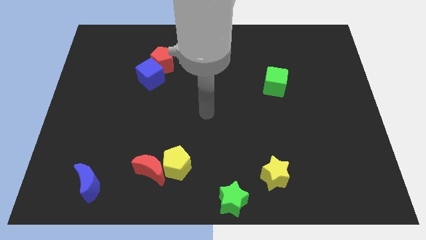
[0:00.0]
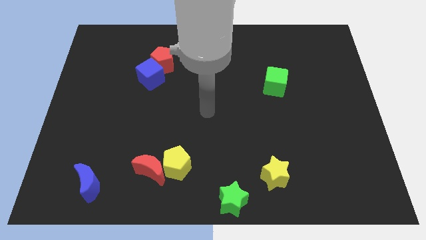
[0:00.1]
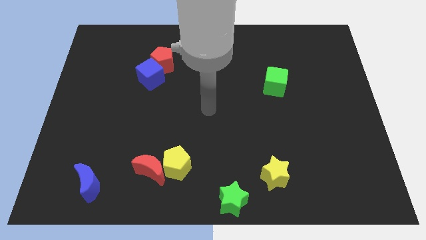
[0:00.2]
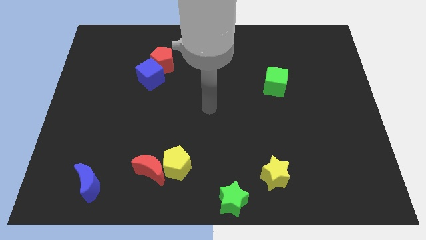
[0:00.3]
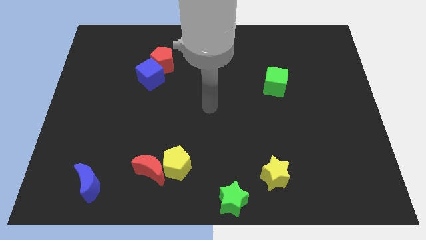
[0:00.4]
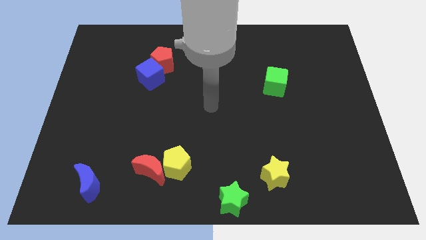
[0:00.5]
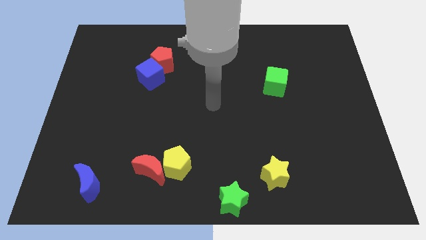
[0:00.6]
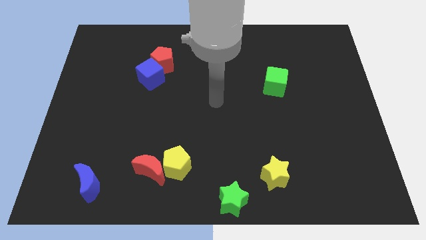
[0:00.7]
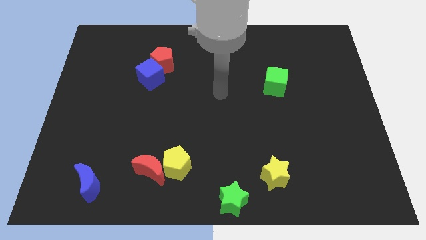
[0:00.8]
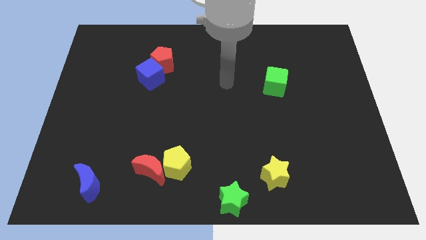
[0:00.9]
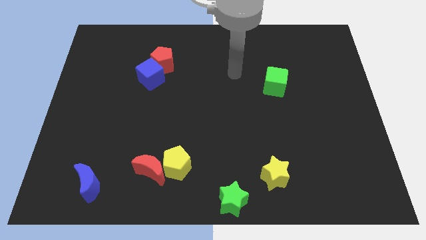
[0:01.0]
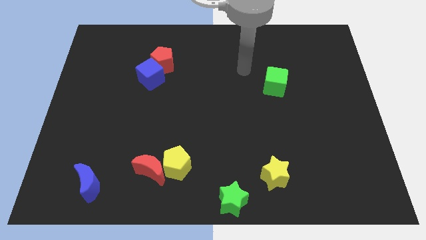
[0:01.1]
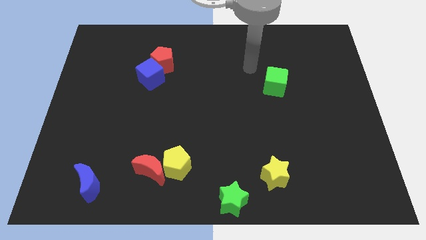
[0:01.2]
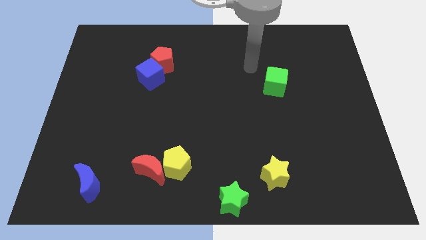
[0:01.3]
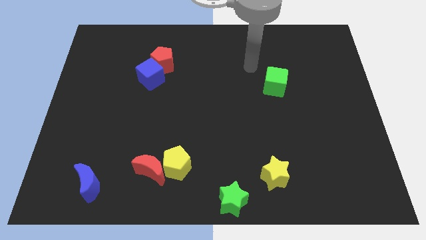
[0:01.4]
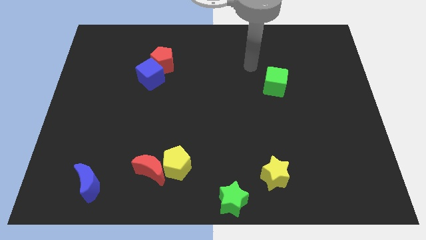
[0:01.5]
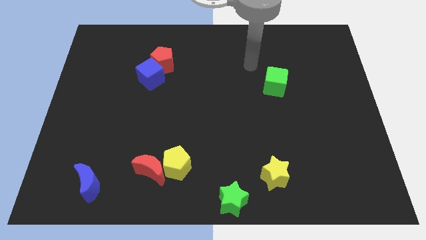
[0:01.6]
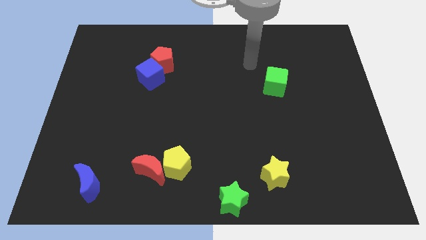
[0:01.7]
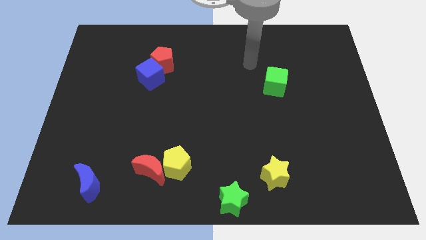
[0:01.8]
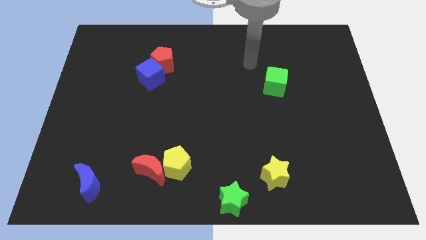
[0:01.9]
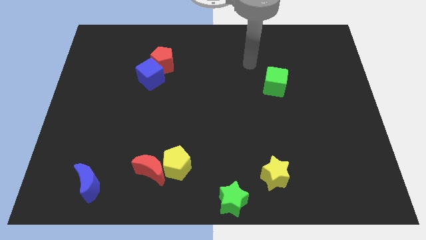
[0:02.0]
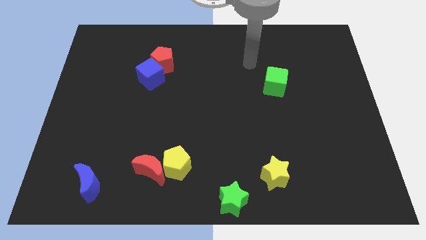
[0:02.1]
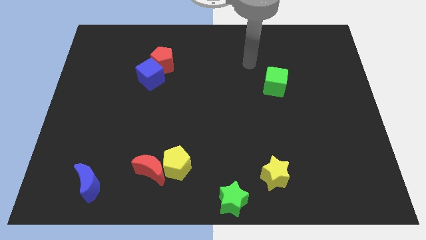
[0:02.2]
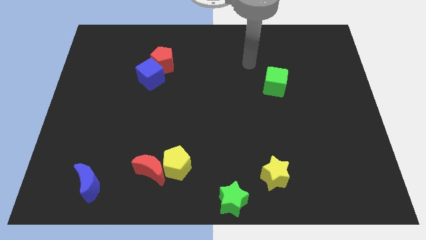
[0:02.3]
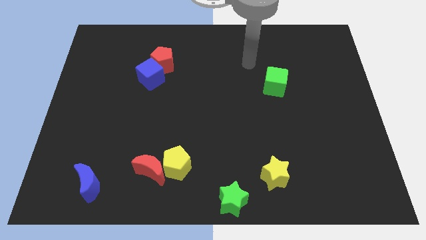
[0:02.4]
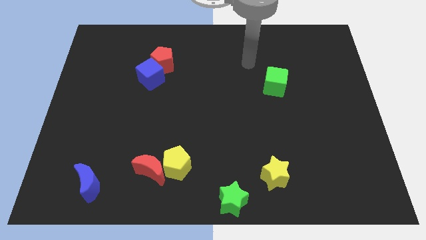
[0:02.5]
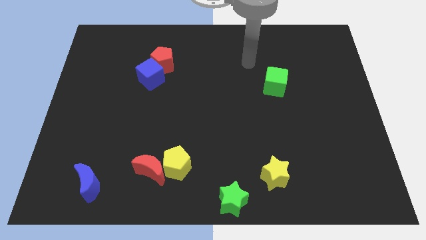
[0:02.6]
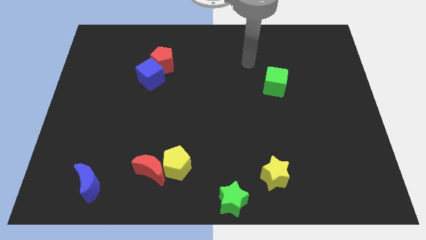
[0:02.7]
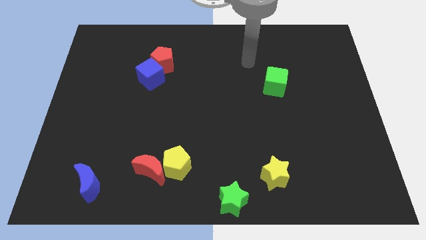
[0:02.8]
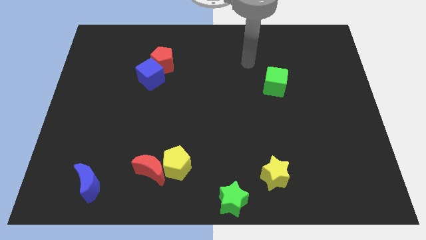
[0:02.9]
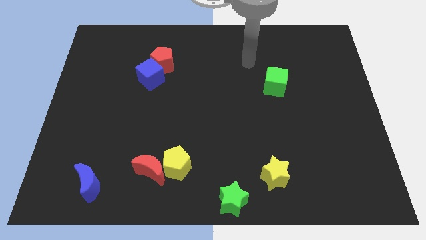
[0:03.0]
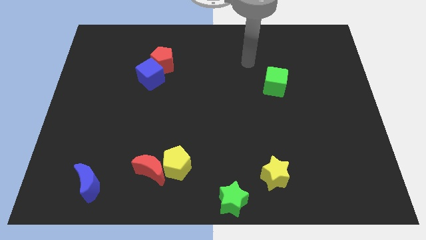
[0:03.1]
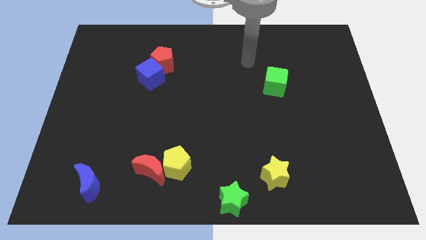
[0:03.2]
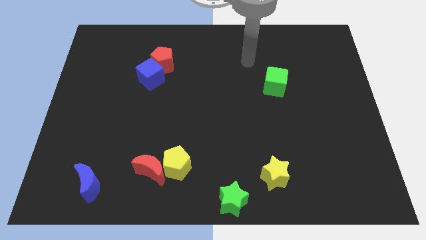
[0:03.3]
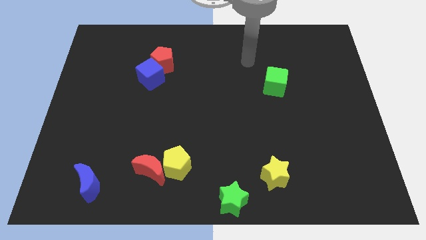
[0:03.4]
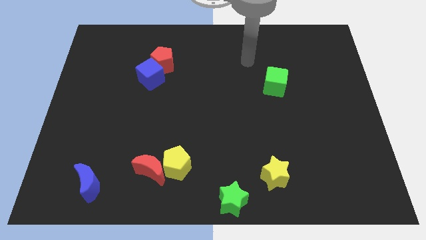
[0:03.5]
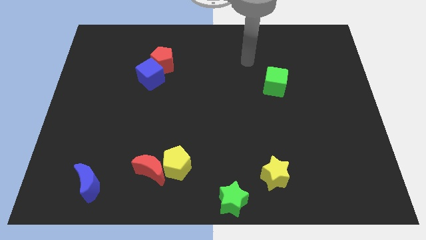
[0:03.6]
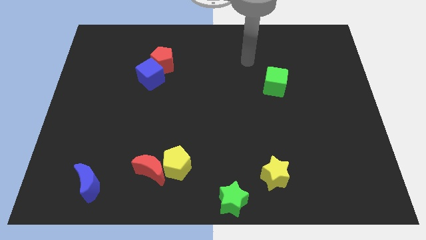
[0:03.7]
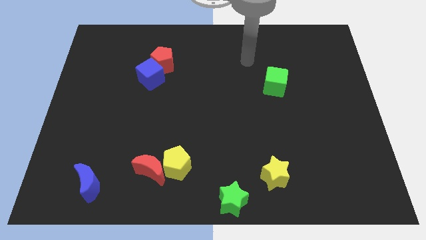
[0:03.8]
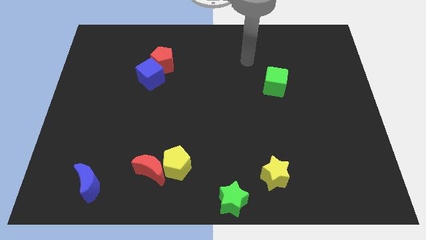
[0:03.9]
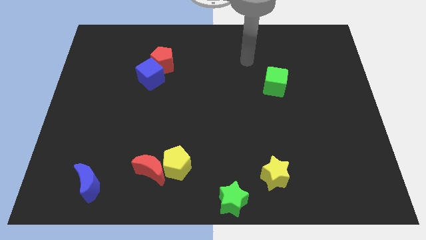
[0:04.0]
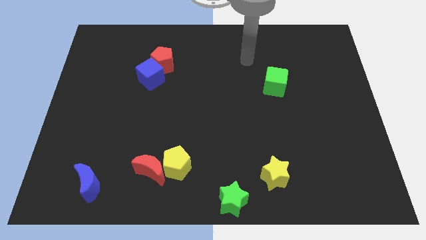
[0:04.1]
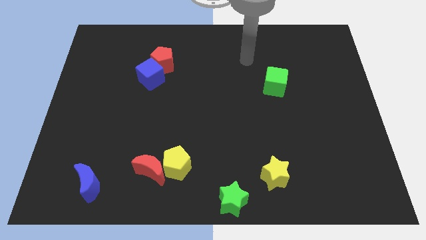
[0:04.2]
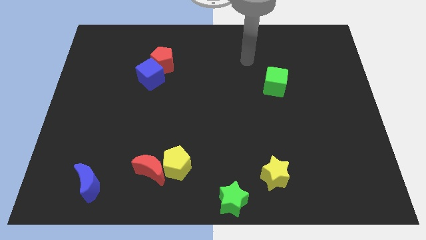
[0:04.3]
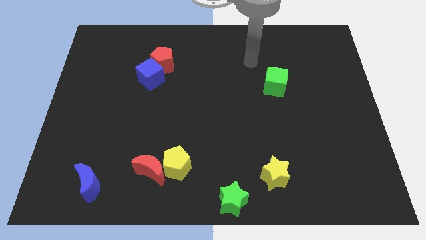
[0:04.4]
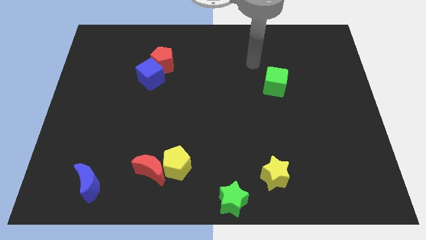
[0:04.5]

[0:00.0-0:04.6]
move arm to the top left side of green cube

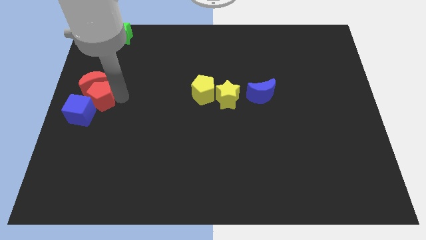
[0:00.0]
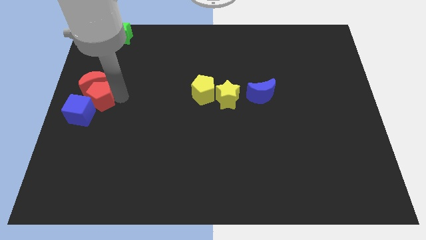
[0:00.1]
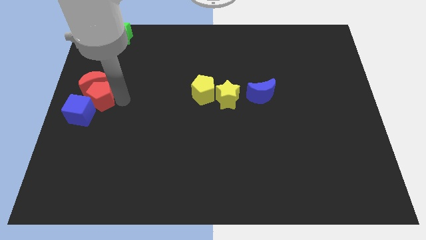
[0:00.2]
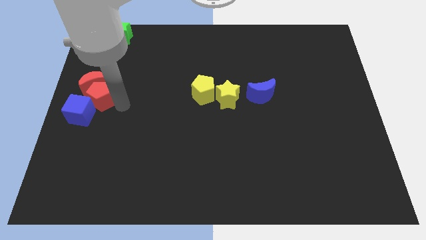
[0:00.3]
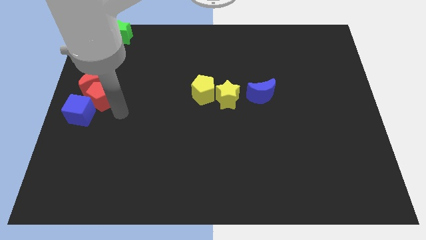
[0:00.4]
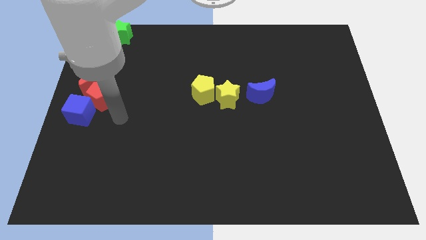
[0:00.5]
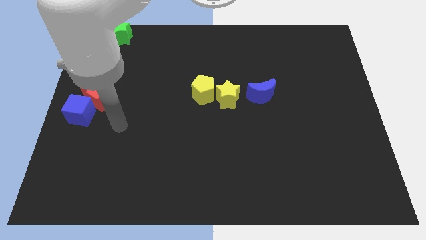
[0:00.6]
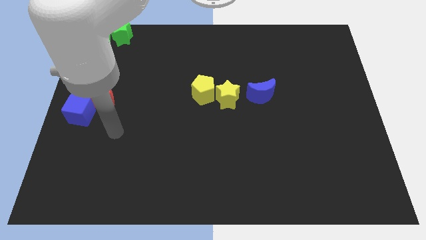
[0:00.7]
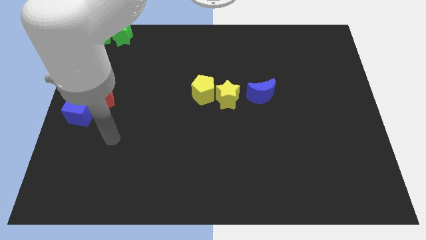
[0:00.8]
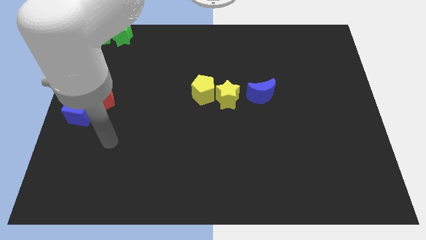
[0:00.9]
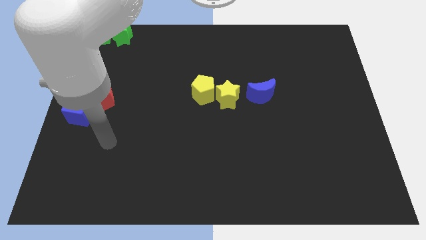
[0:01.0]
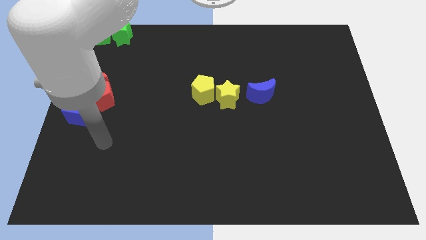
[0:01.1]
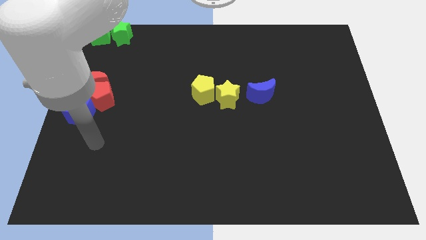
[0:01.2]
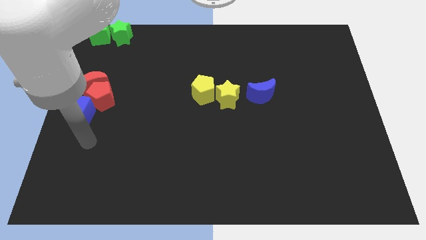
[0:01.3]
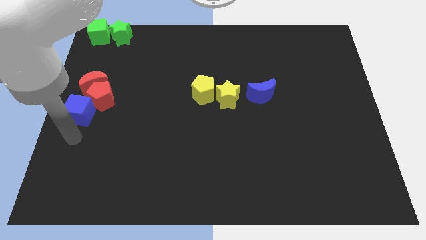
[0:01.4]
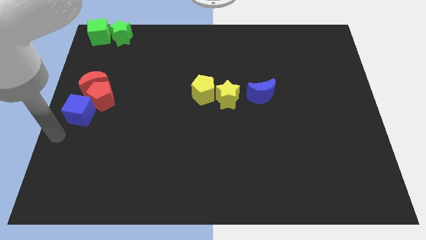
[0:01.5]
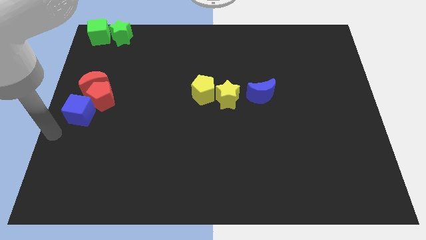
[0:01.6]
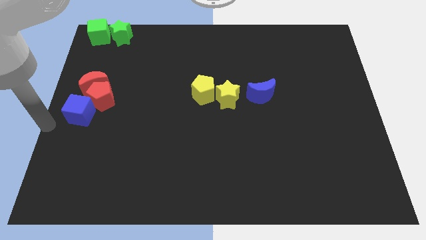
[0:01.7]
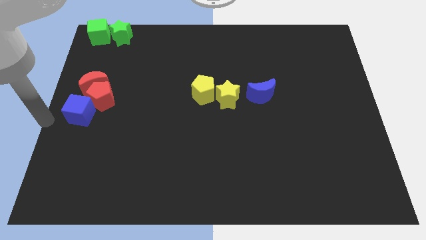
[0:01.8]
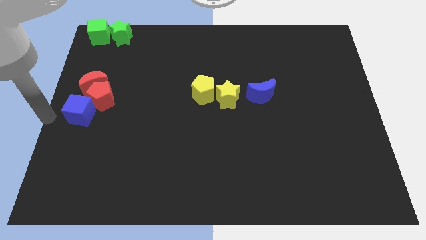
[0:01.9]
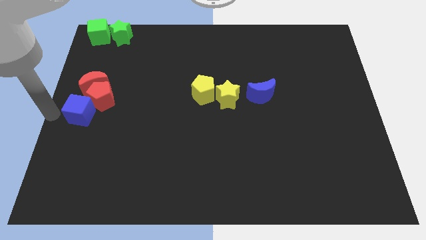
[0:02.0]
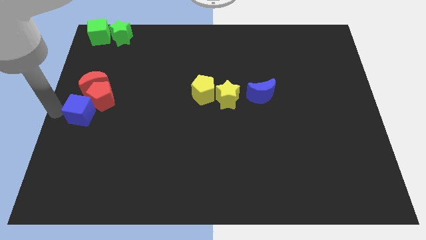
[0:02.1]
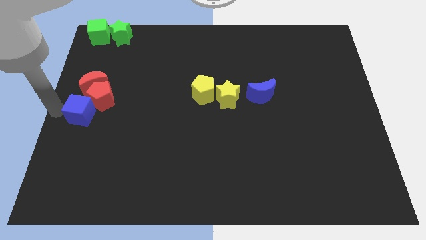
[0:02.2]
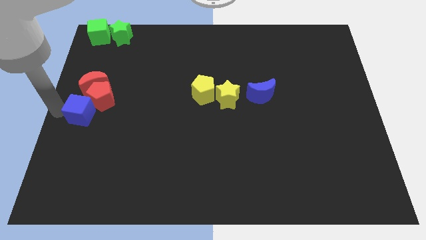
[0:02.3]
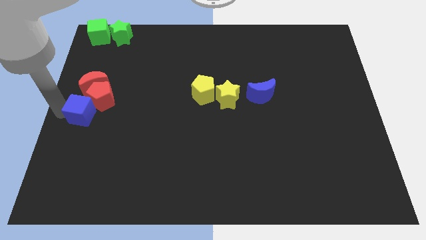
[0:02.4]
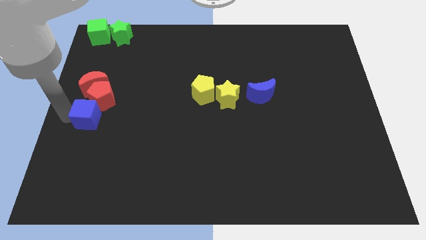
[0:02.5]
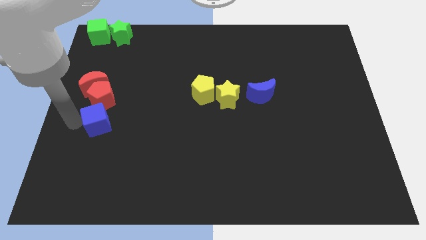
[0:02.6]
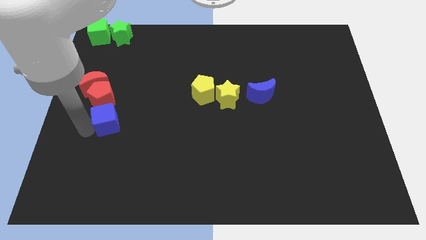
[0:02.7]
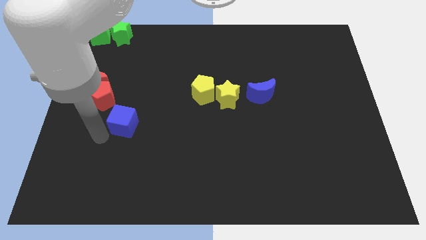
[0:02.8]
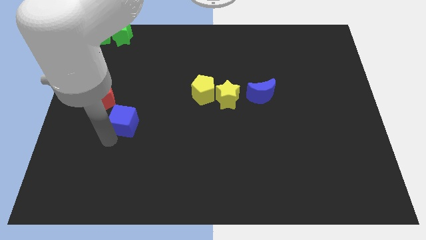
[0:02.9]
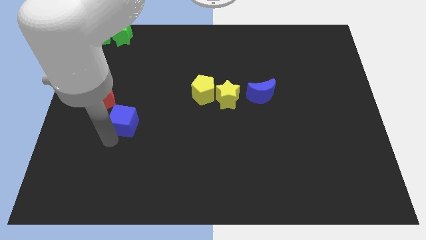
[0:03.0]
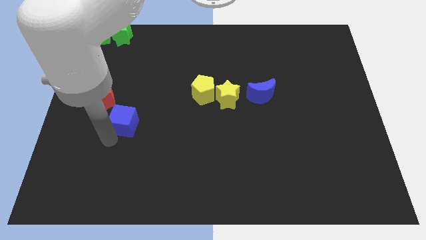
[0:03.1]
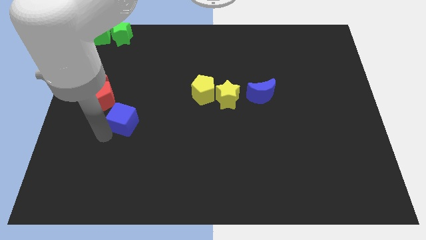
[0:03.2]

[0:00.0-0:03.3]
move the blue cube diagonal to the red pentagon

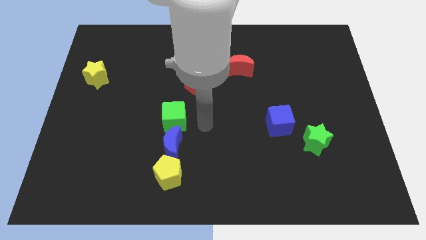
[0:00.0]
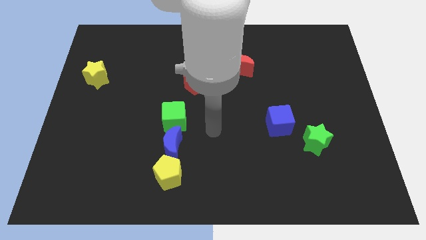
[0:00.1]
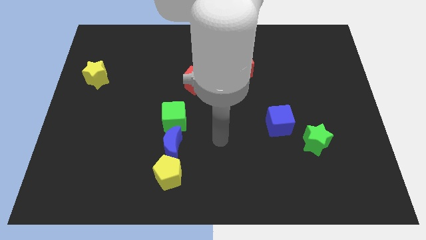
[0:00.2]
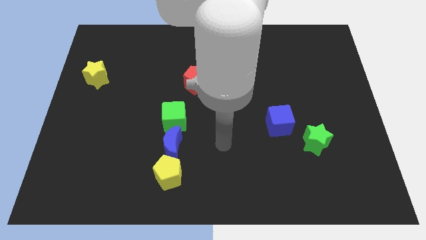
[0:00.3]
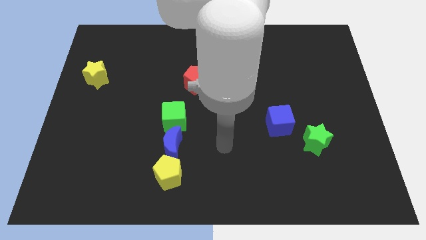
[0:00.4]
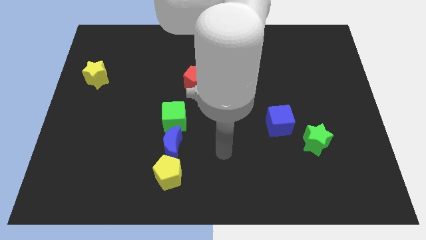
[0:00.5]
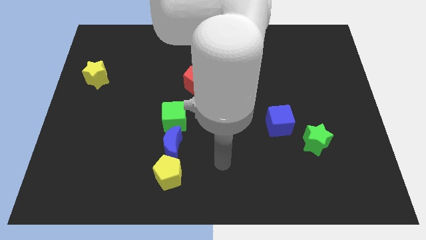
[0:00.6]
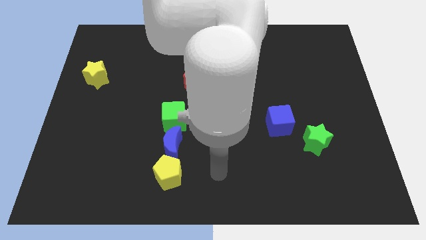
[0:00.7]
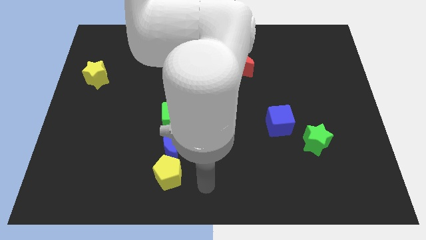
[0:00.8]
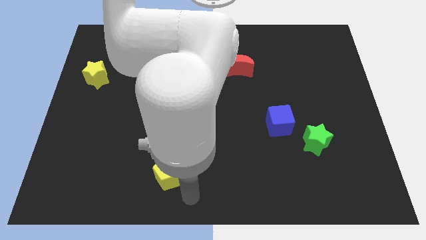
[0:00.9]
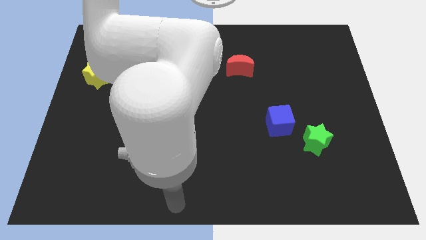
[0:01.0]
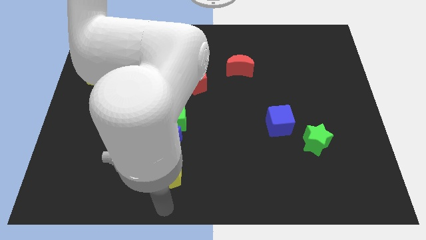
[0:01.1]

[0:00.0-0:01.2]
point your arm at the bottom of yellow pentagon
